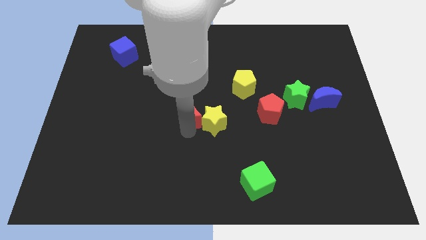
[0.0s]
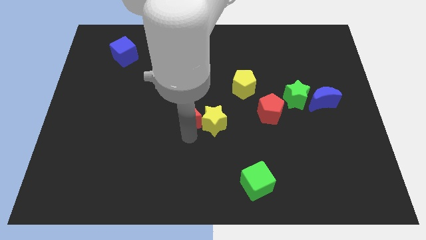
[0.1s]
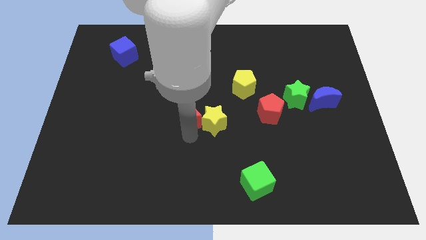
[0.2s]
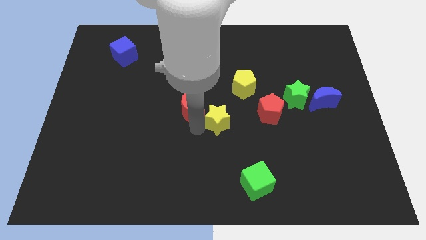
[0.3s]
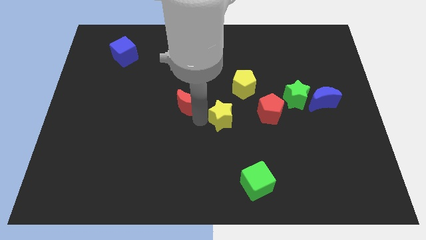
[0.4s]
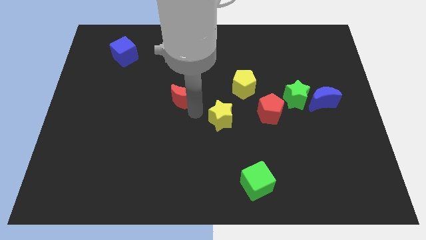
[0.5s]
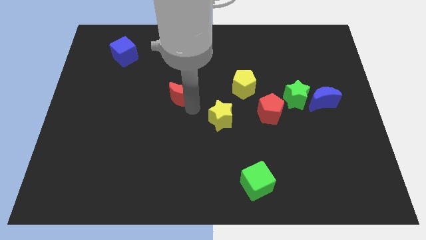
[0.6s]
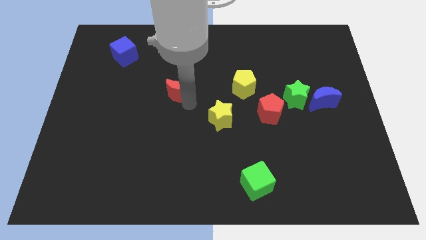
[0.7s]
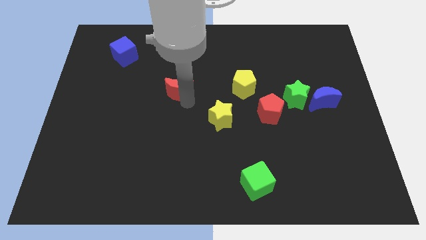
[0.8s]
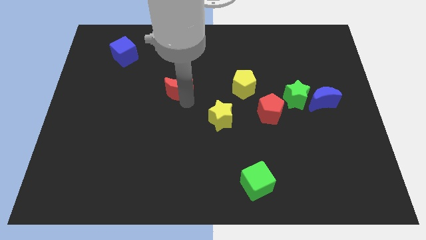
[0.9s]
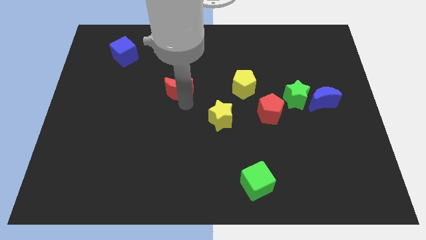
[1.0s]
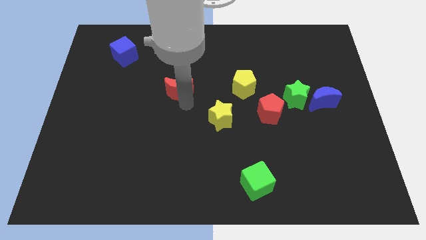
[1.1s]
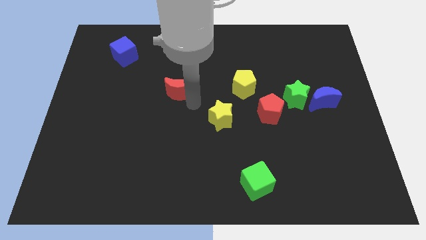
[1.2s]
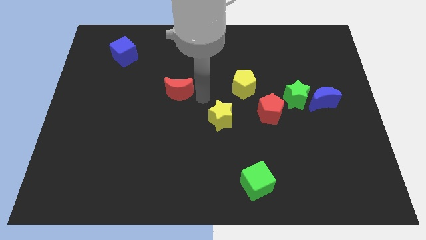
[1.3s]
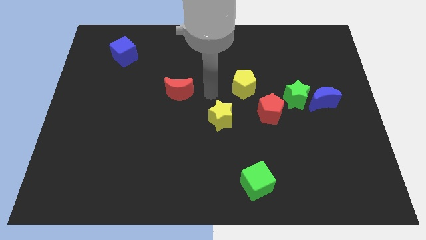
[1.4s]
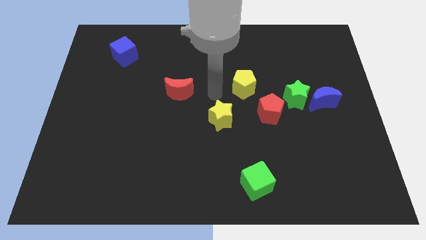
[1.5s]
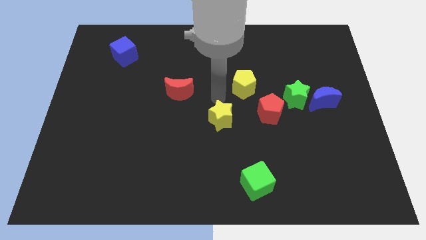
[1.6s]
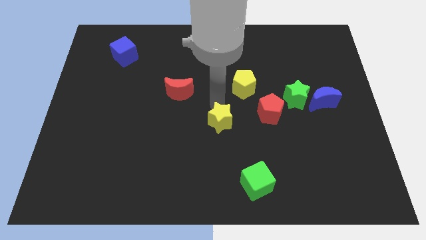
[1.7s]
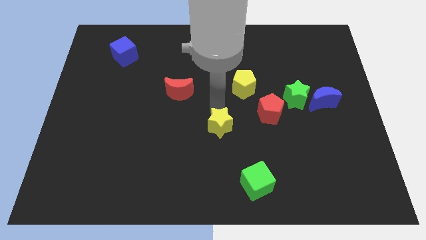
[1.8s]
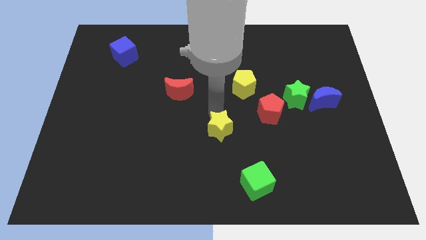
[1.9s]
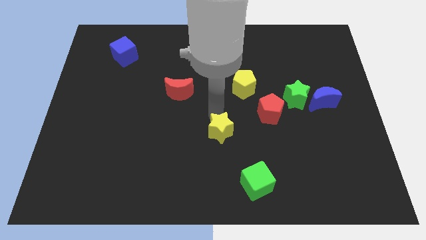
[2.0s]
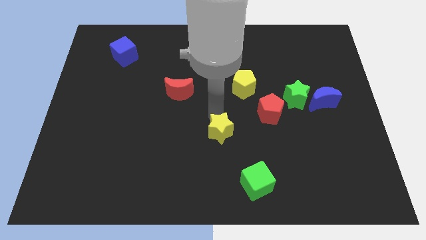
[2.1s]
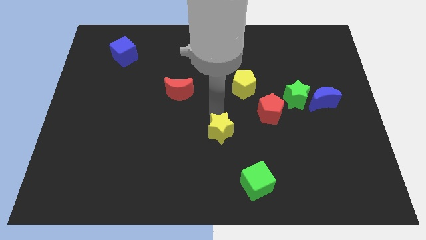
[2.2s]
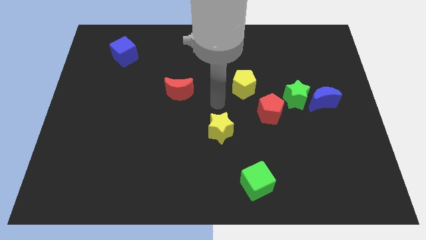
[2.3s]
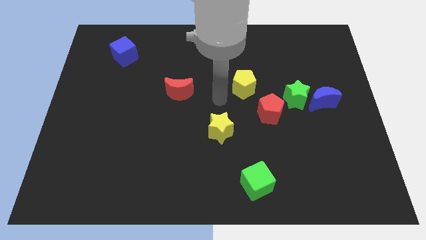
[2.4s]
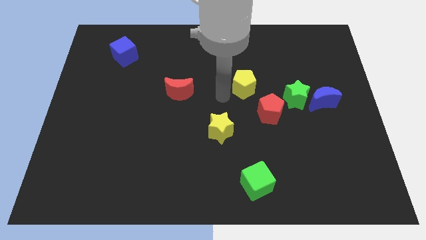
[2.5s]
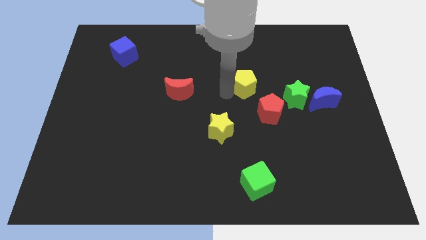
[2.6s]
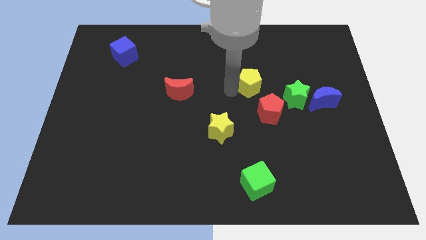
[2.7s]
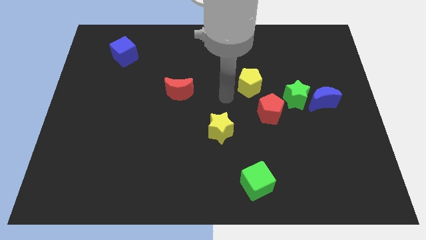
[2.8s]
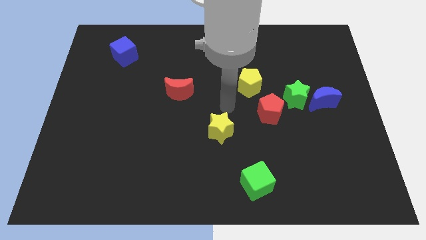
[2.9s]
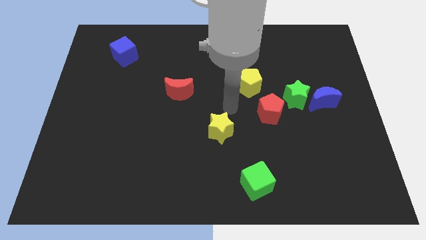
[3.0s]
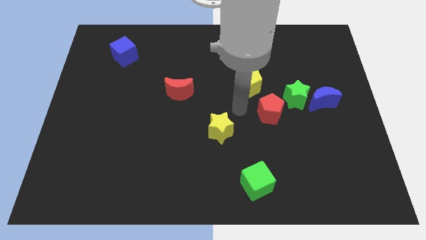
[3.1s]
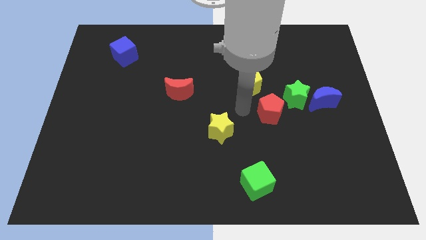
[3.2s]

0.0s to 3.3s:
separate the red moon and the yellow star

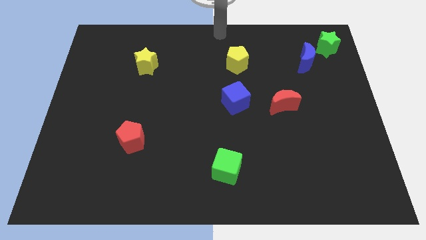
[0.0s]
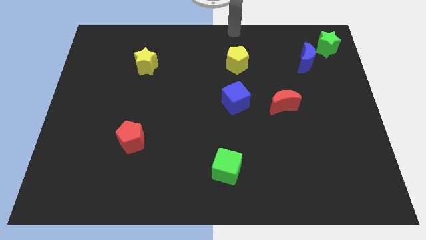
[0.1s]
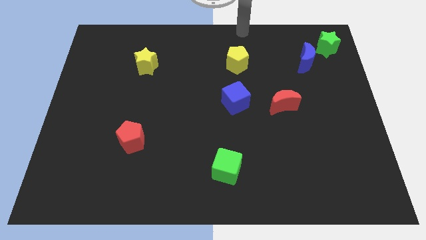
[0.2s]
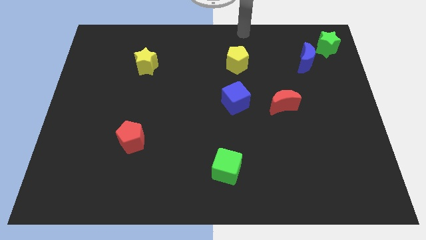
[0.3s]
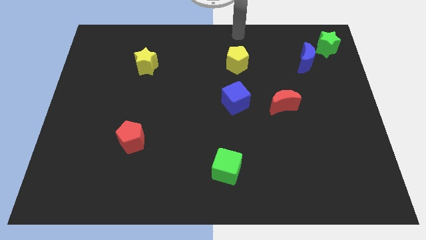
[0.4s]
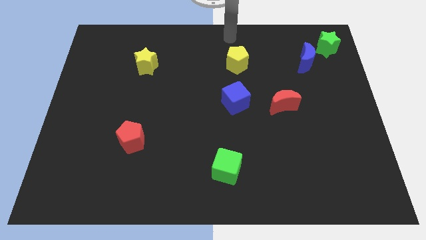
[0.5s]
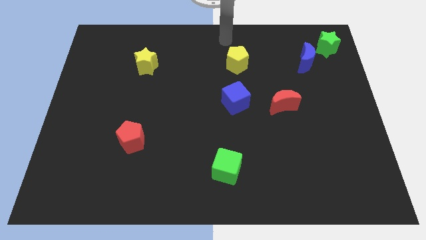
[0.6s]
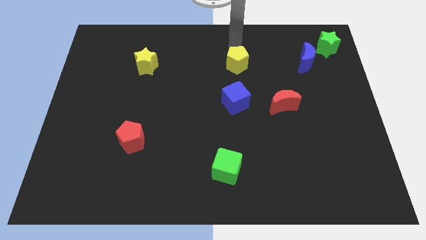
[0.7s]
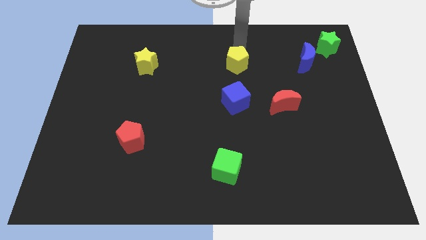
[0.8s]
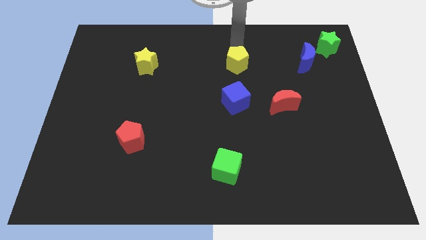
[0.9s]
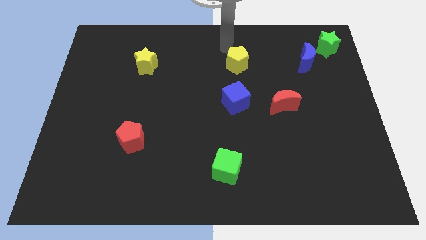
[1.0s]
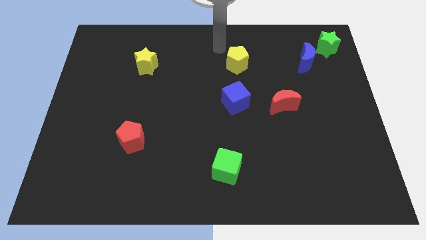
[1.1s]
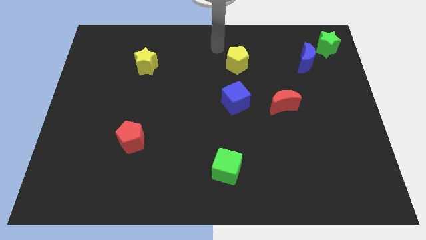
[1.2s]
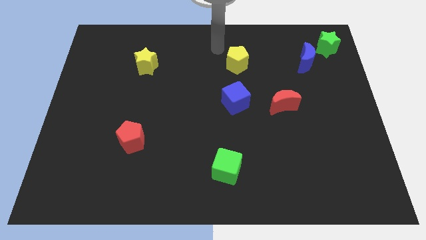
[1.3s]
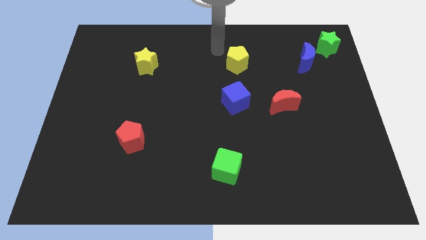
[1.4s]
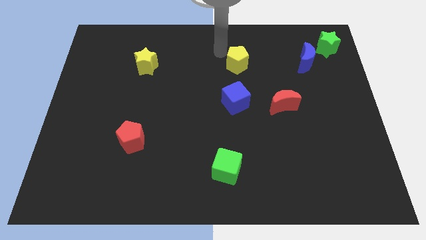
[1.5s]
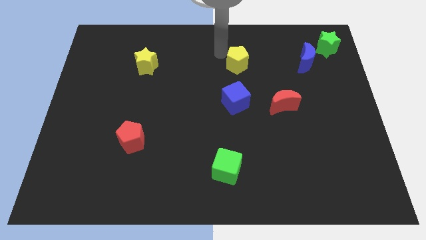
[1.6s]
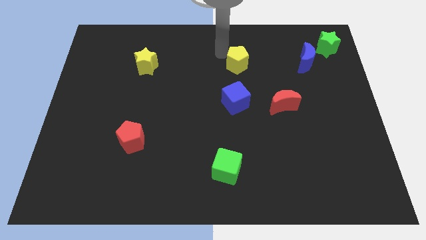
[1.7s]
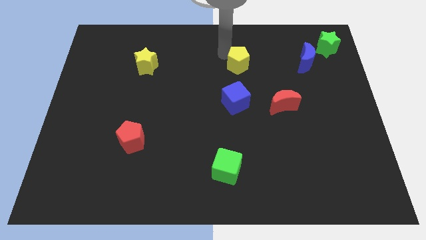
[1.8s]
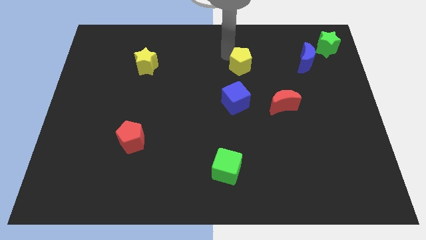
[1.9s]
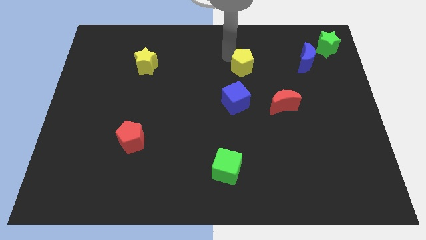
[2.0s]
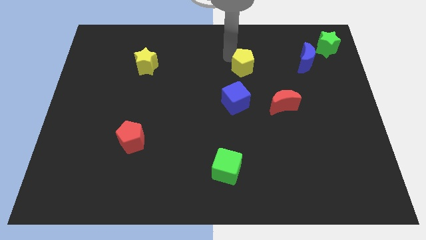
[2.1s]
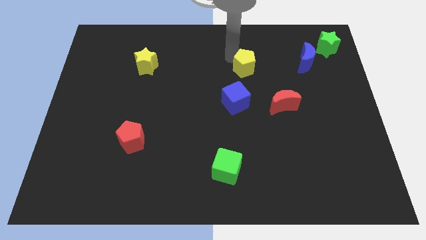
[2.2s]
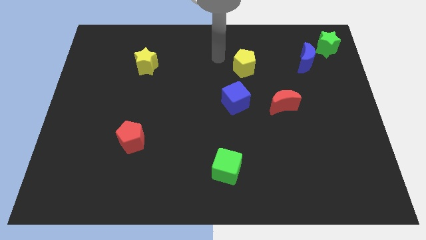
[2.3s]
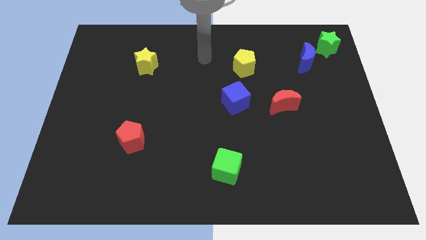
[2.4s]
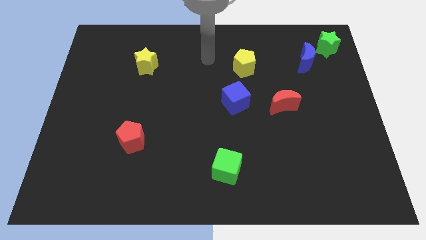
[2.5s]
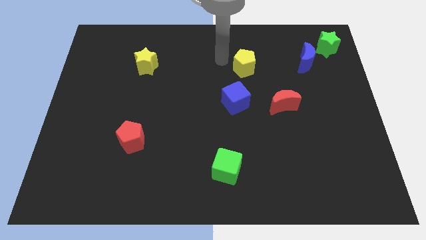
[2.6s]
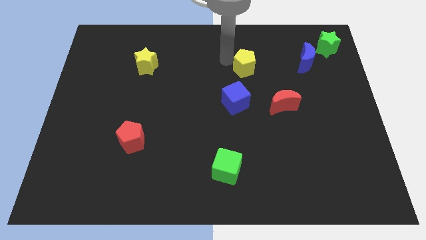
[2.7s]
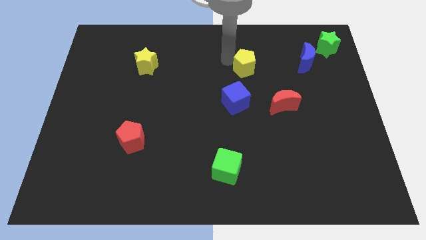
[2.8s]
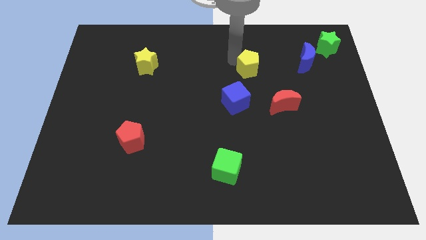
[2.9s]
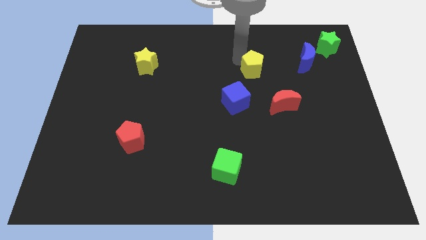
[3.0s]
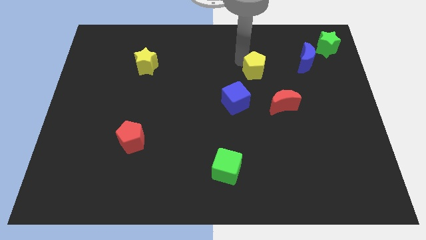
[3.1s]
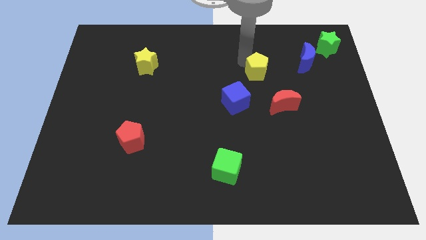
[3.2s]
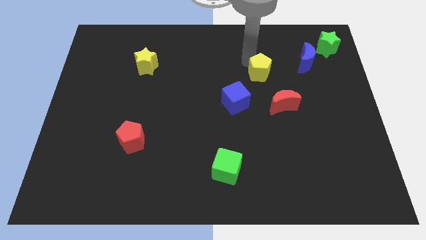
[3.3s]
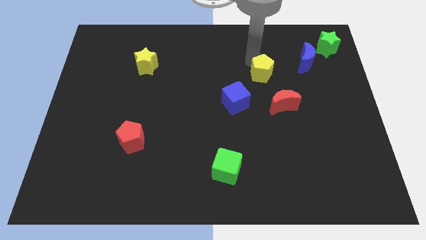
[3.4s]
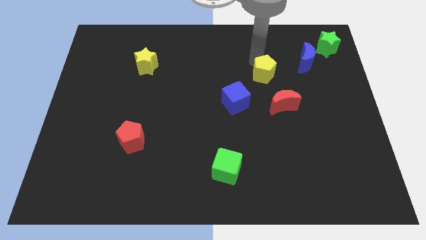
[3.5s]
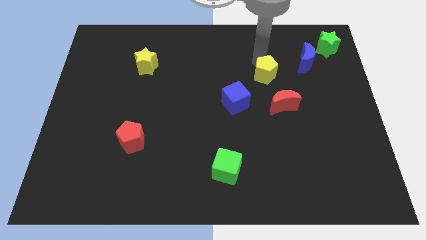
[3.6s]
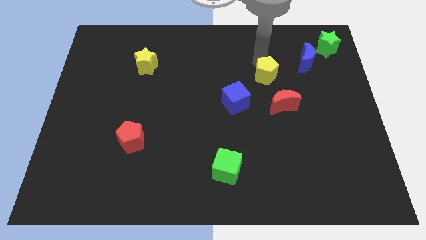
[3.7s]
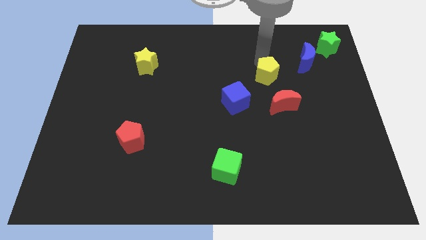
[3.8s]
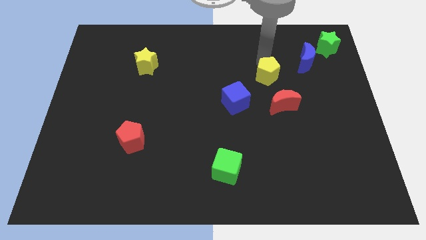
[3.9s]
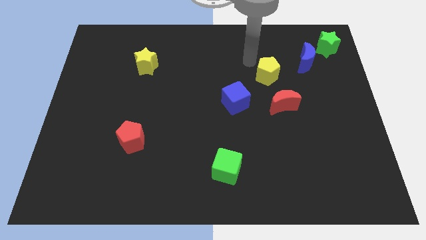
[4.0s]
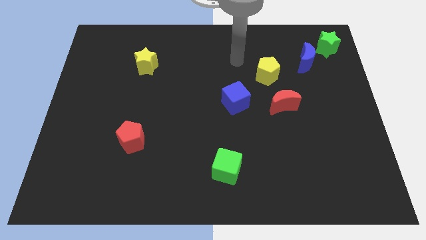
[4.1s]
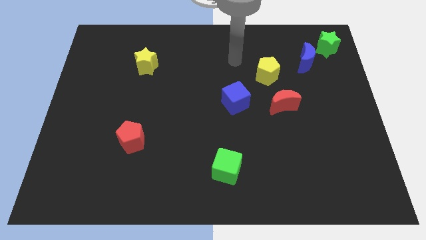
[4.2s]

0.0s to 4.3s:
put the yellow pentagon in between the blue cube and blue moon

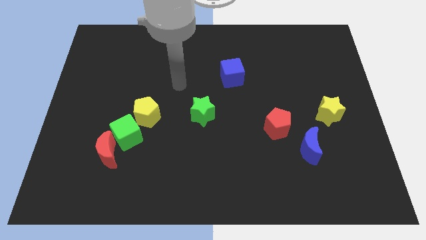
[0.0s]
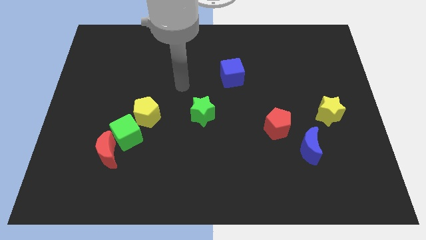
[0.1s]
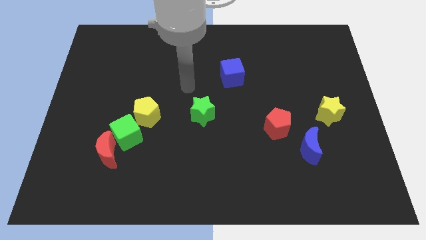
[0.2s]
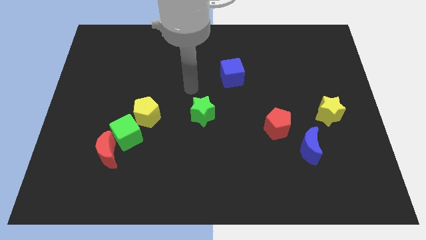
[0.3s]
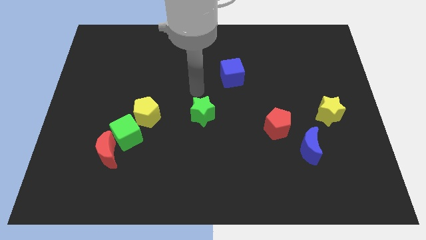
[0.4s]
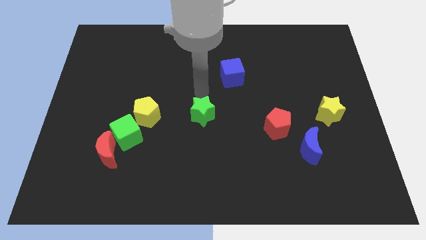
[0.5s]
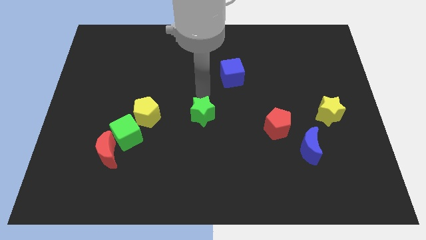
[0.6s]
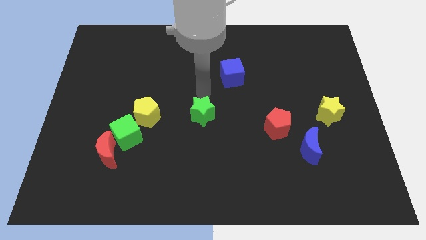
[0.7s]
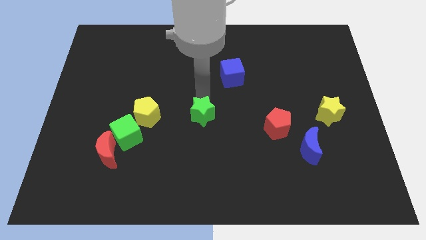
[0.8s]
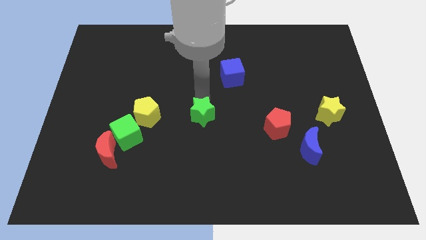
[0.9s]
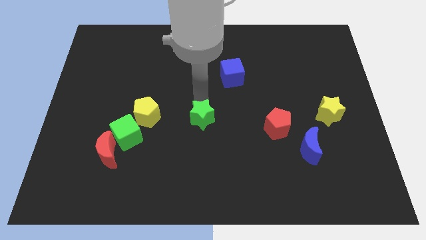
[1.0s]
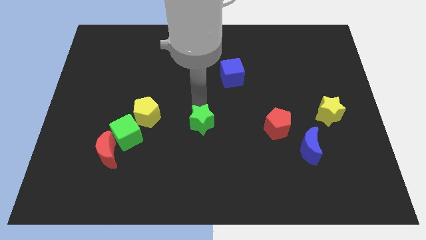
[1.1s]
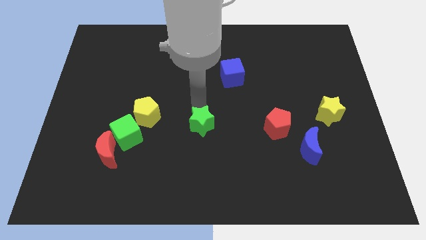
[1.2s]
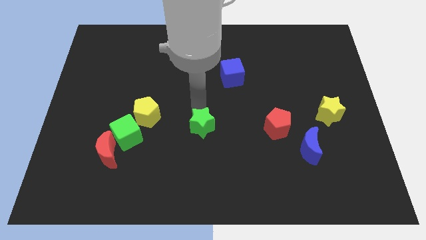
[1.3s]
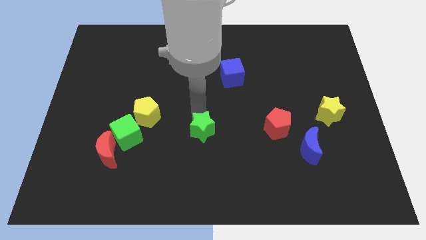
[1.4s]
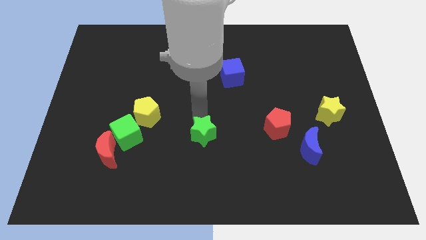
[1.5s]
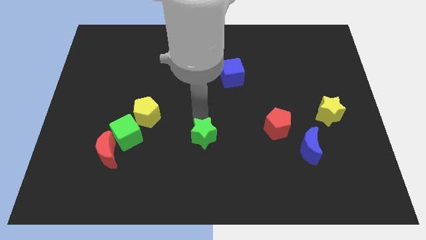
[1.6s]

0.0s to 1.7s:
push the green star below to the center of board
